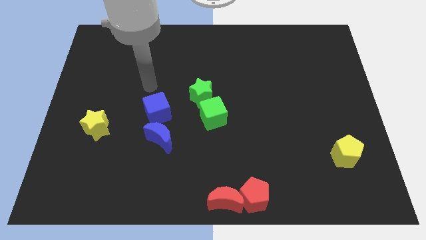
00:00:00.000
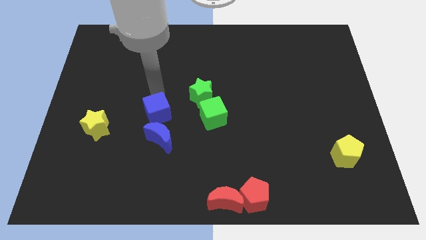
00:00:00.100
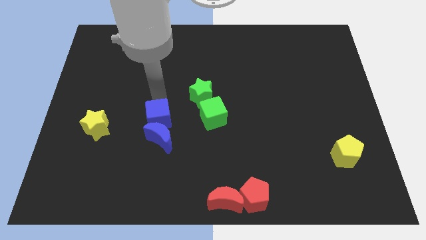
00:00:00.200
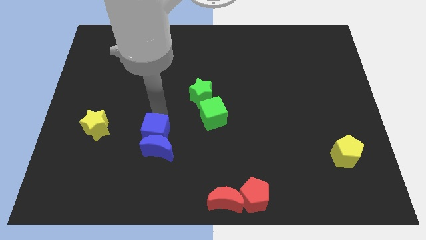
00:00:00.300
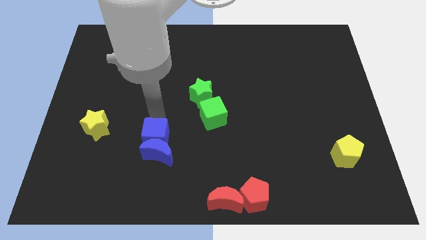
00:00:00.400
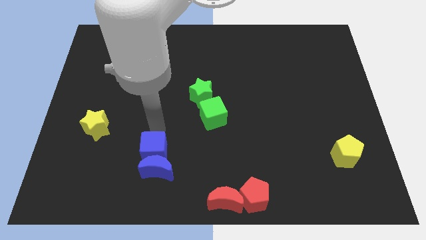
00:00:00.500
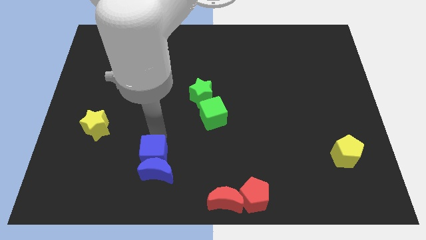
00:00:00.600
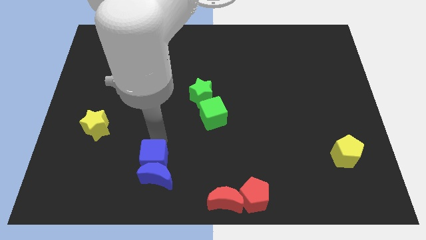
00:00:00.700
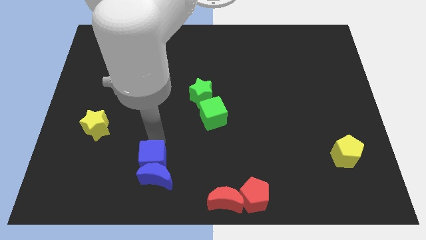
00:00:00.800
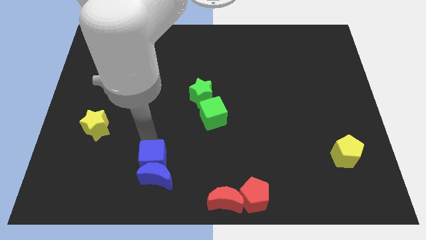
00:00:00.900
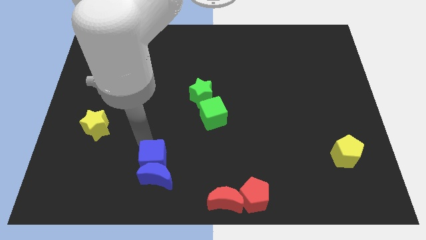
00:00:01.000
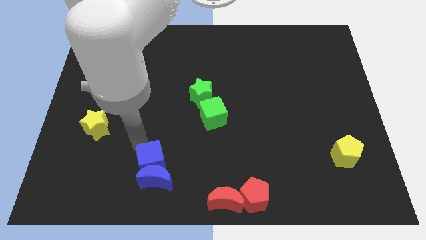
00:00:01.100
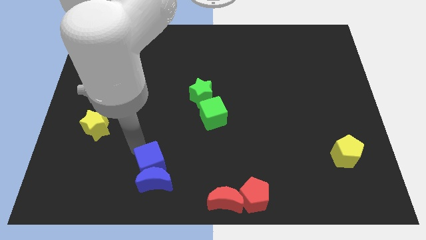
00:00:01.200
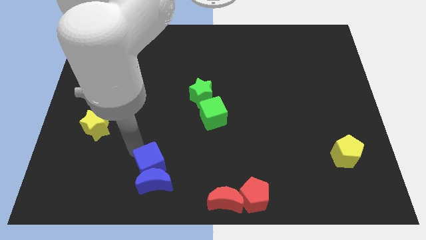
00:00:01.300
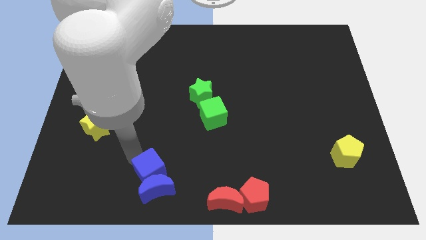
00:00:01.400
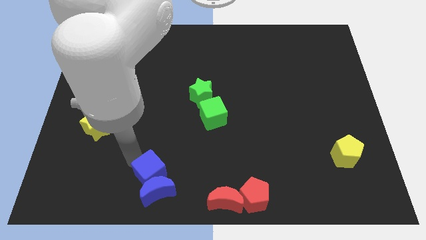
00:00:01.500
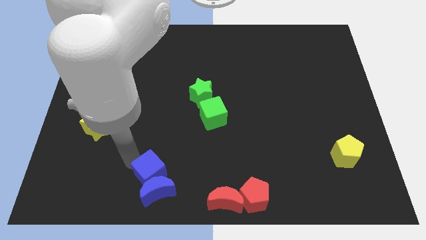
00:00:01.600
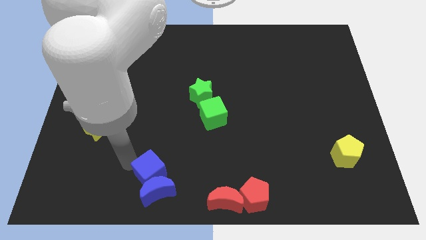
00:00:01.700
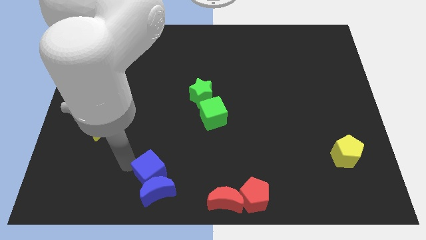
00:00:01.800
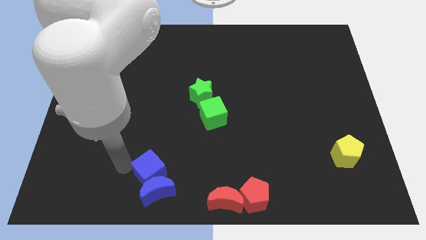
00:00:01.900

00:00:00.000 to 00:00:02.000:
push the blue crescent towards the bottom center of the board with the help of the blue cube

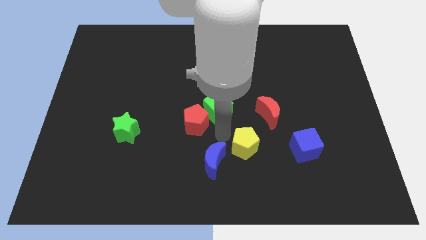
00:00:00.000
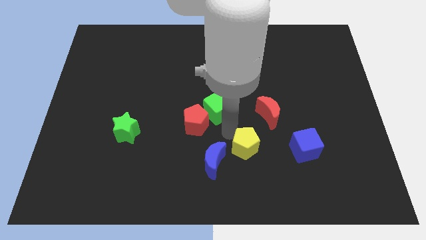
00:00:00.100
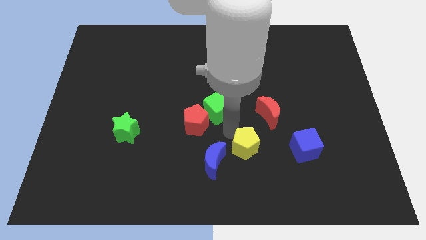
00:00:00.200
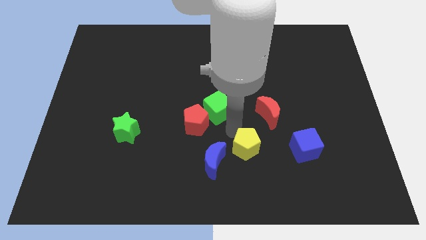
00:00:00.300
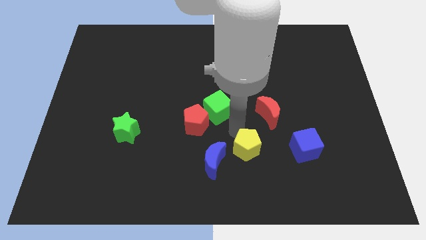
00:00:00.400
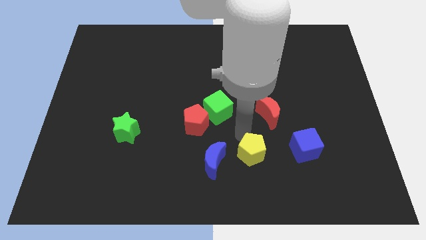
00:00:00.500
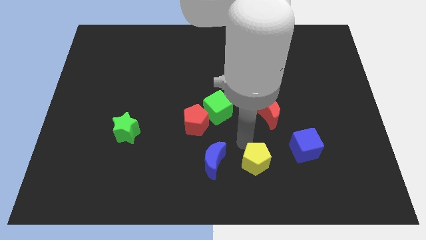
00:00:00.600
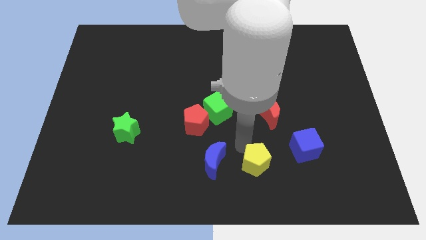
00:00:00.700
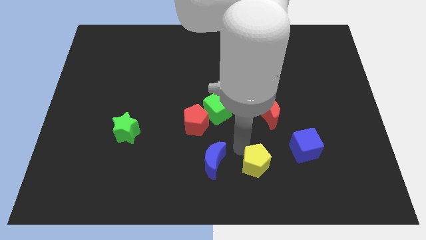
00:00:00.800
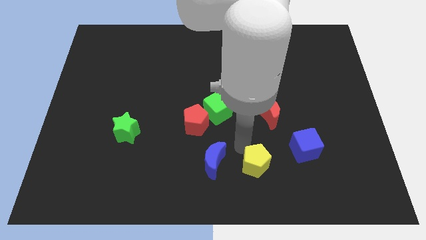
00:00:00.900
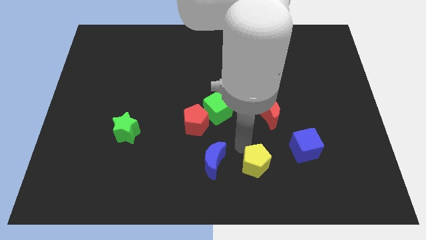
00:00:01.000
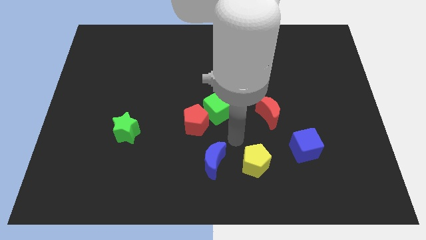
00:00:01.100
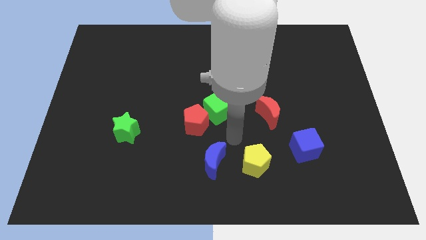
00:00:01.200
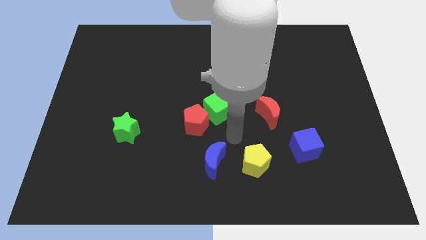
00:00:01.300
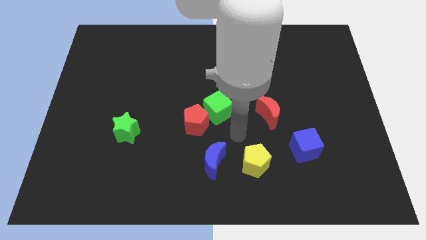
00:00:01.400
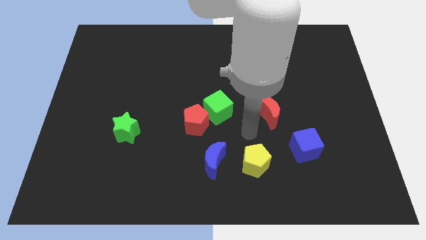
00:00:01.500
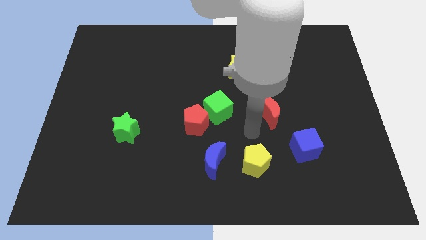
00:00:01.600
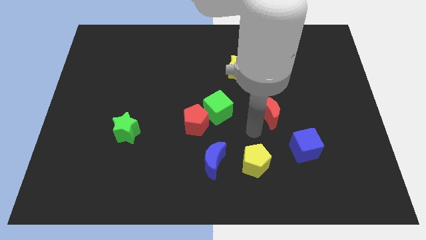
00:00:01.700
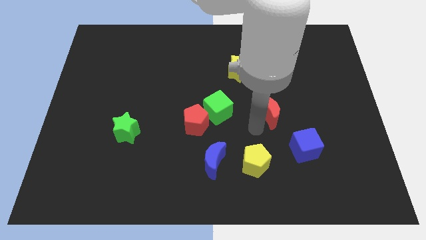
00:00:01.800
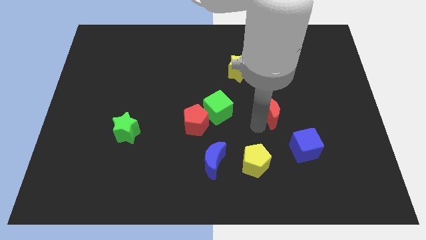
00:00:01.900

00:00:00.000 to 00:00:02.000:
push the yellow pentagon downwards slightly

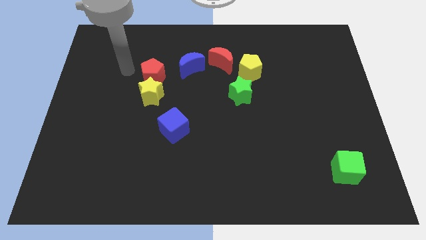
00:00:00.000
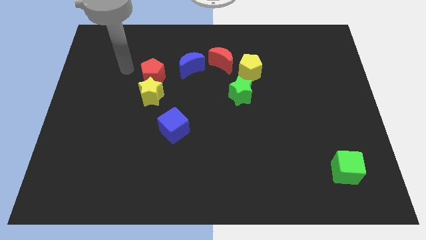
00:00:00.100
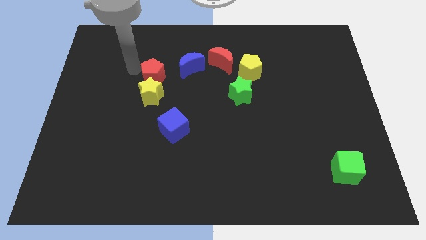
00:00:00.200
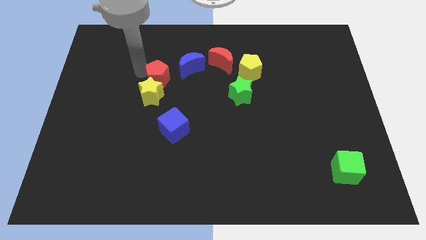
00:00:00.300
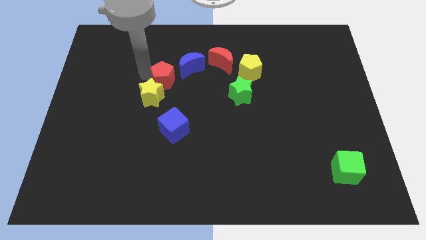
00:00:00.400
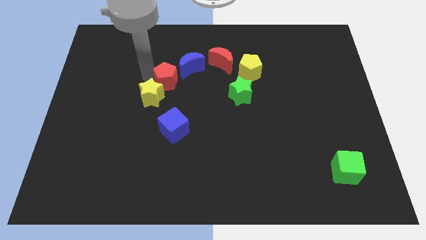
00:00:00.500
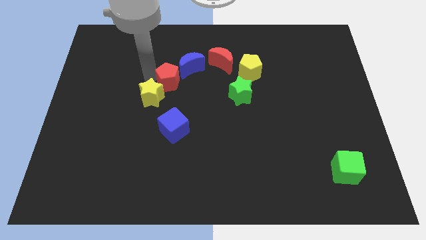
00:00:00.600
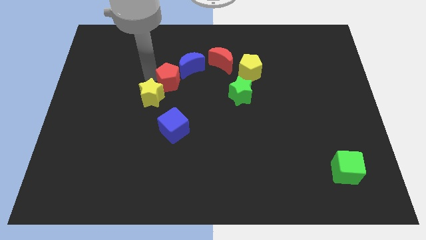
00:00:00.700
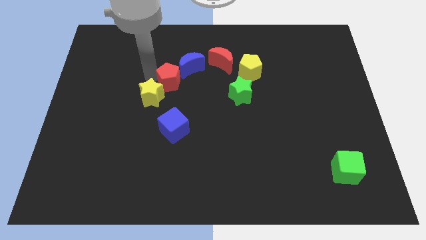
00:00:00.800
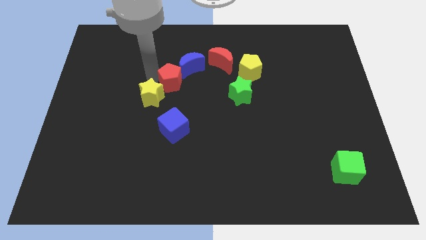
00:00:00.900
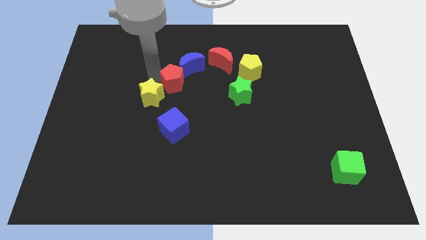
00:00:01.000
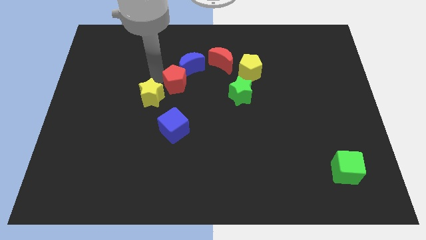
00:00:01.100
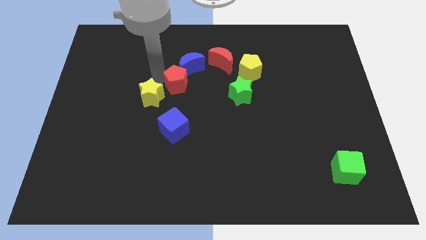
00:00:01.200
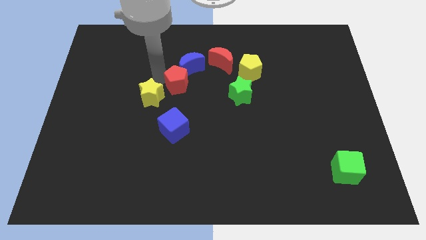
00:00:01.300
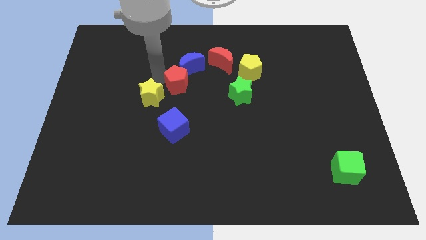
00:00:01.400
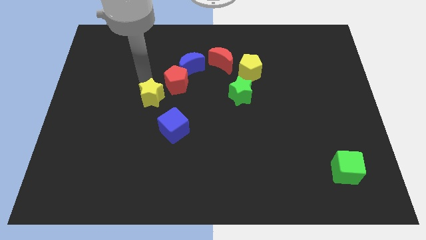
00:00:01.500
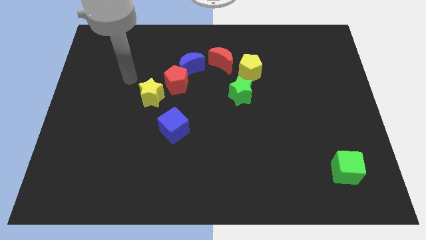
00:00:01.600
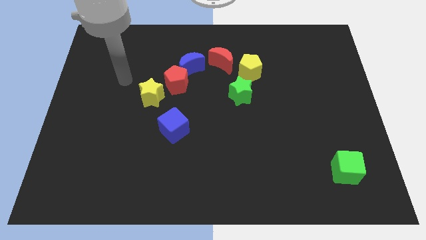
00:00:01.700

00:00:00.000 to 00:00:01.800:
place the red pentagon in between yellow star and blue moon

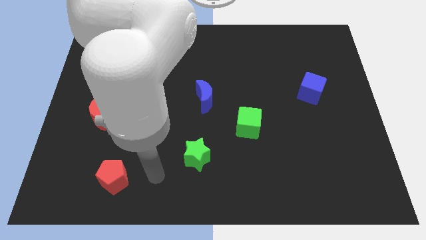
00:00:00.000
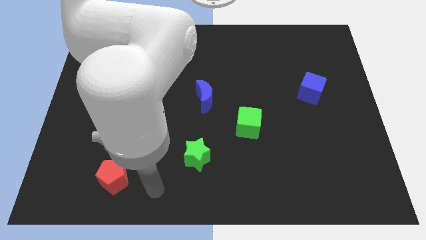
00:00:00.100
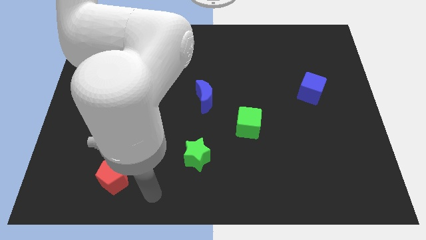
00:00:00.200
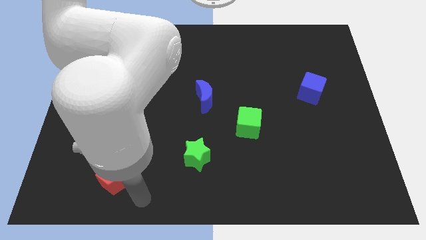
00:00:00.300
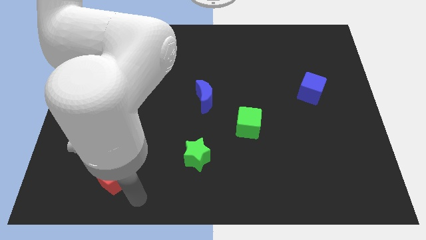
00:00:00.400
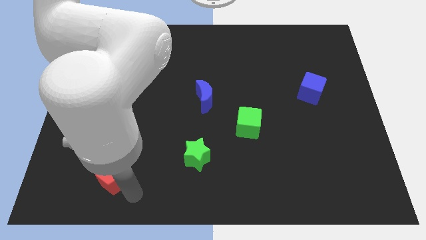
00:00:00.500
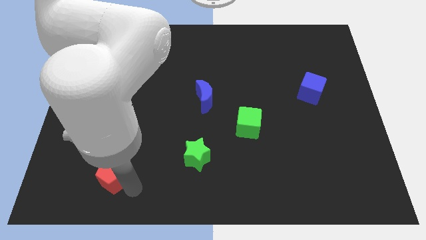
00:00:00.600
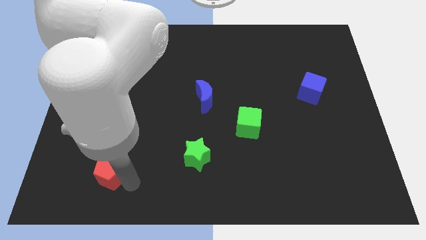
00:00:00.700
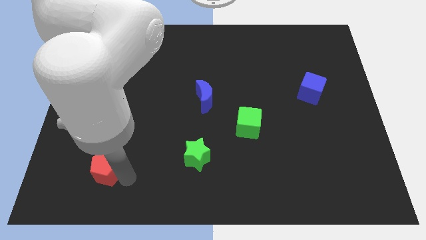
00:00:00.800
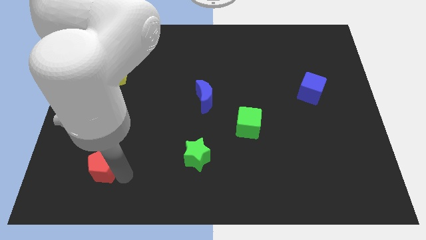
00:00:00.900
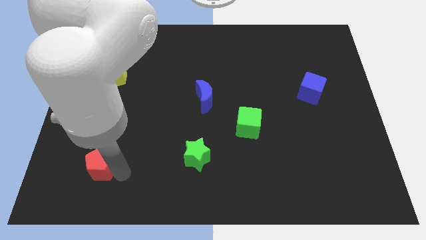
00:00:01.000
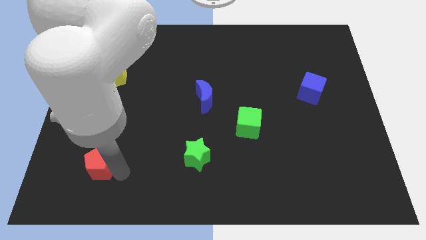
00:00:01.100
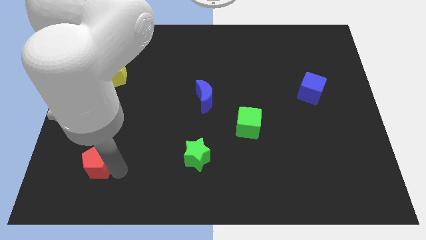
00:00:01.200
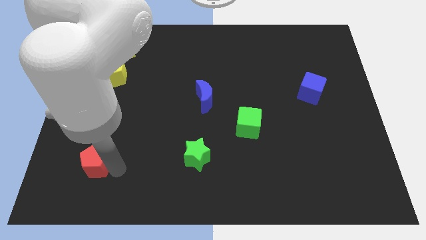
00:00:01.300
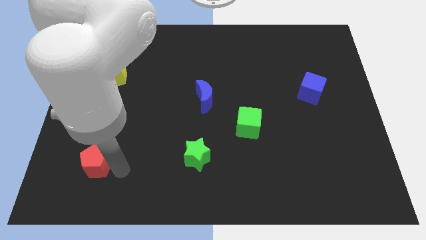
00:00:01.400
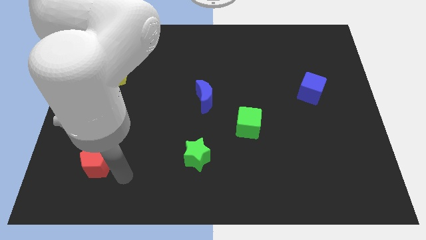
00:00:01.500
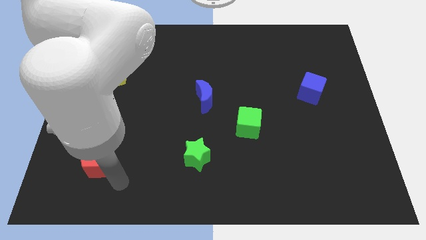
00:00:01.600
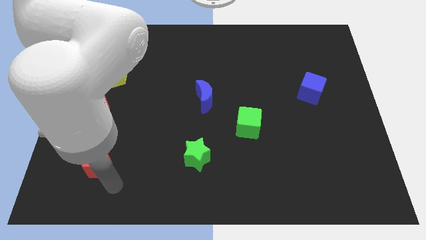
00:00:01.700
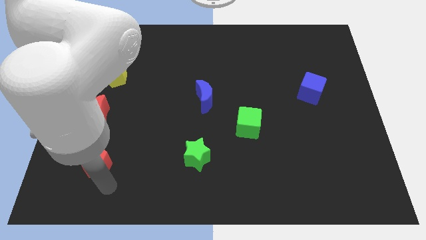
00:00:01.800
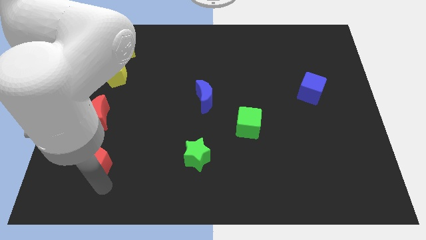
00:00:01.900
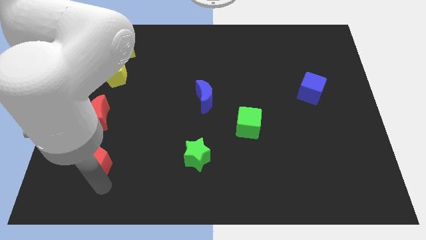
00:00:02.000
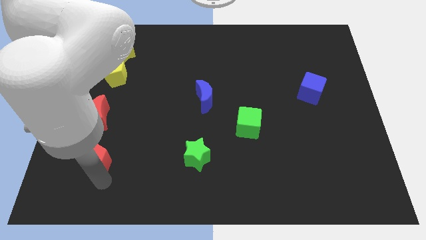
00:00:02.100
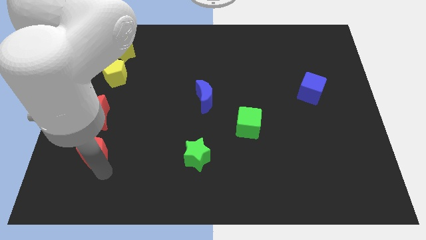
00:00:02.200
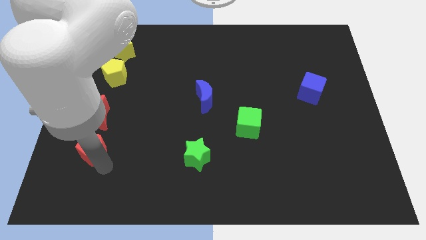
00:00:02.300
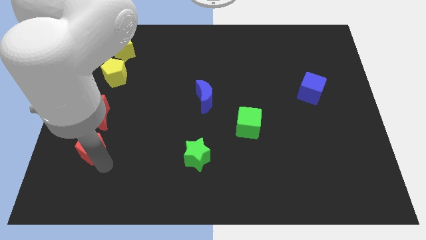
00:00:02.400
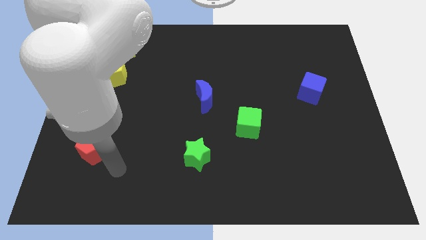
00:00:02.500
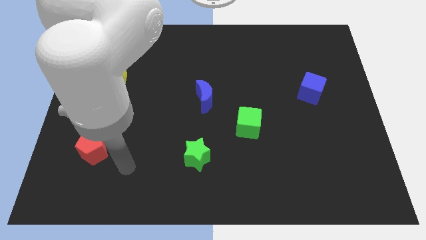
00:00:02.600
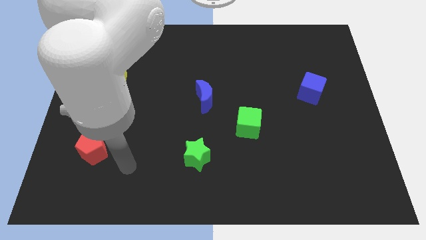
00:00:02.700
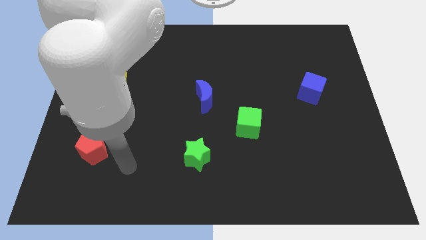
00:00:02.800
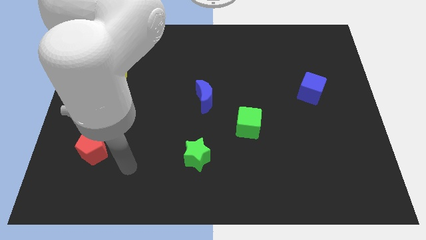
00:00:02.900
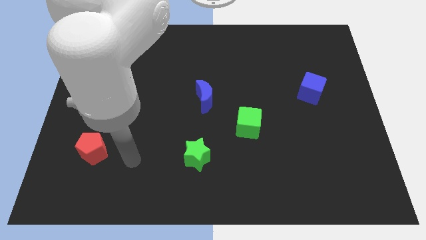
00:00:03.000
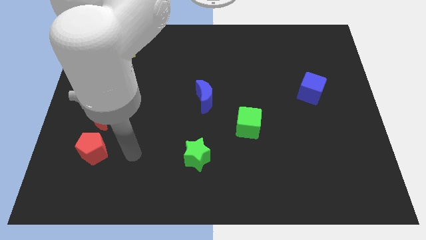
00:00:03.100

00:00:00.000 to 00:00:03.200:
place the red pentagon below the red moon
